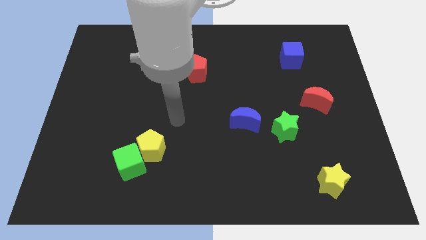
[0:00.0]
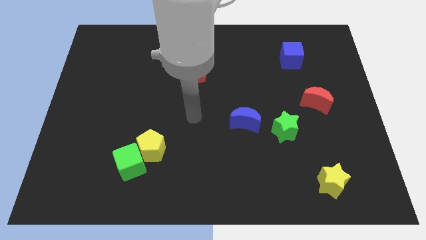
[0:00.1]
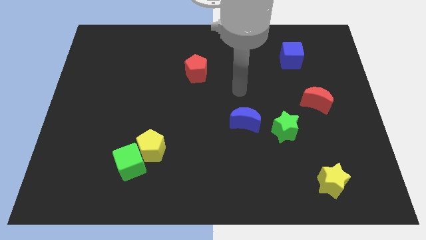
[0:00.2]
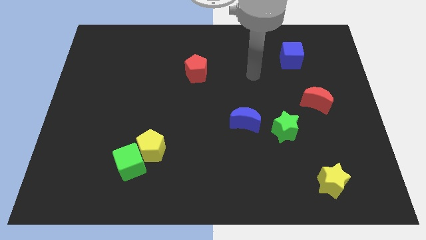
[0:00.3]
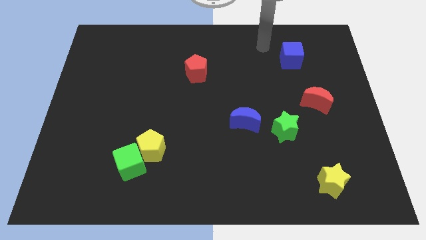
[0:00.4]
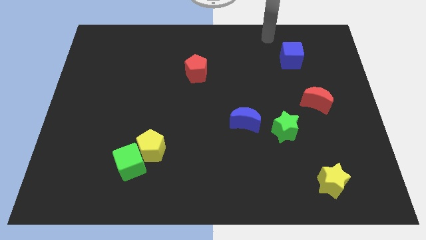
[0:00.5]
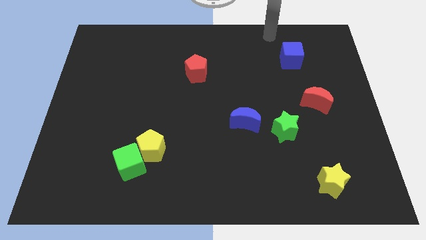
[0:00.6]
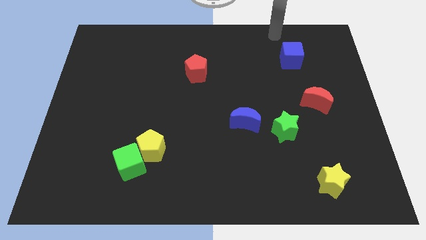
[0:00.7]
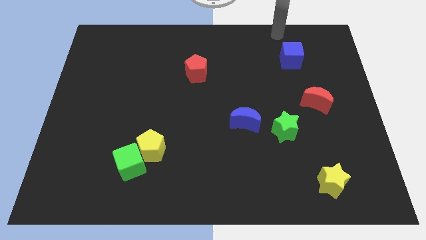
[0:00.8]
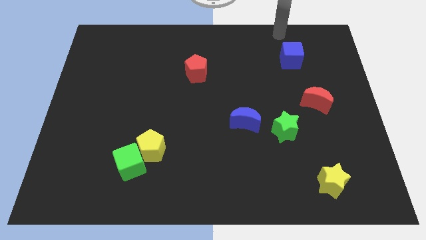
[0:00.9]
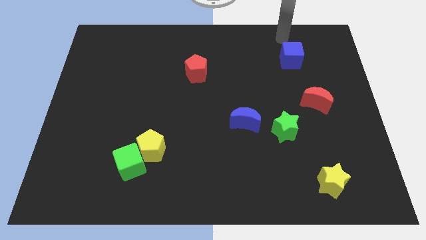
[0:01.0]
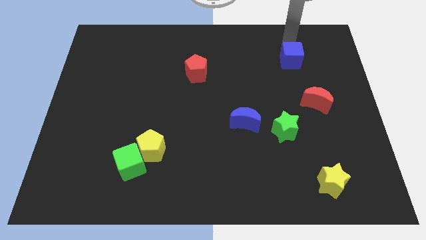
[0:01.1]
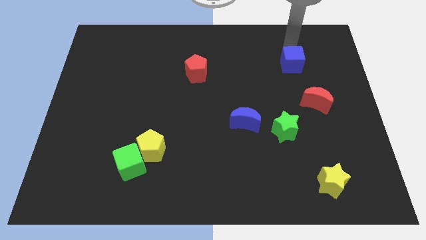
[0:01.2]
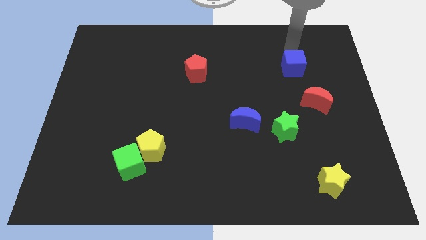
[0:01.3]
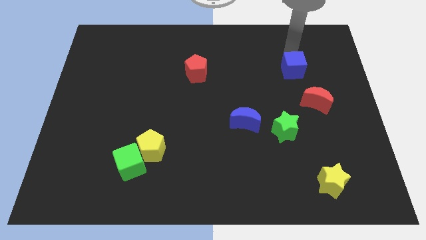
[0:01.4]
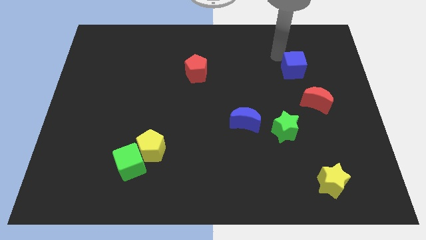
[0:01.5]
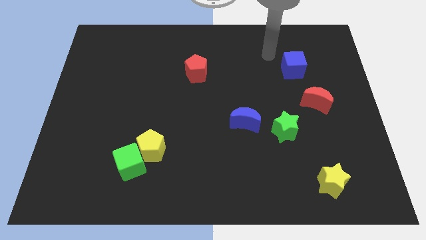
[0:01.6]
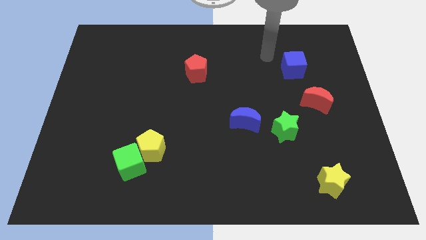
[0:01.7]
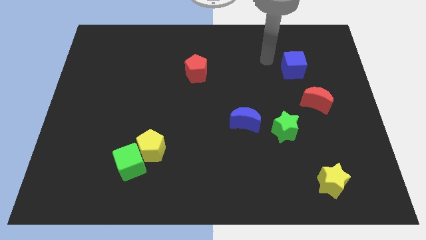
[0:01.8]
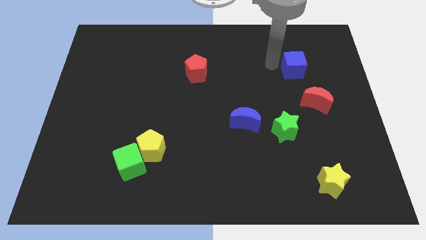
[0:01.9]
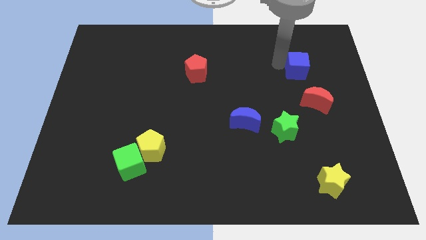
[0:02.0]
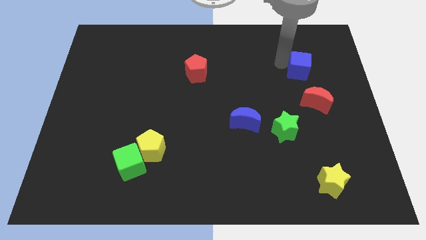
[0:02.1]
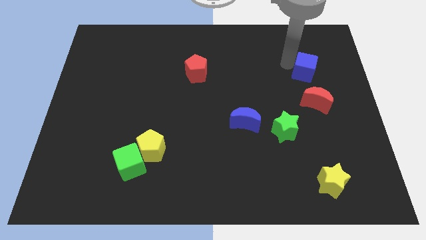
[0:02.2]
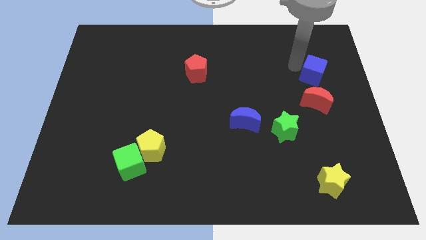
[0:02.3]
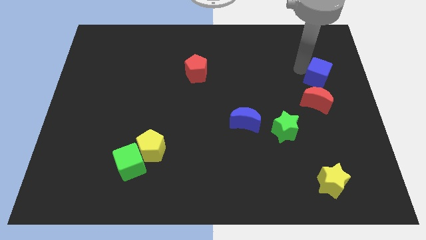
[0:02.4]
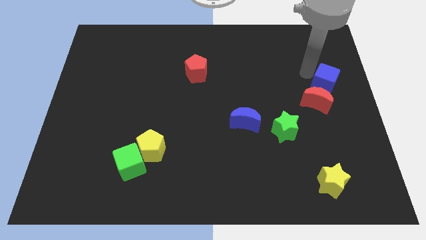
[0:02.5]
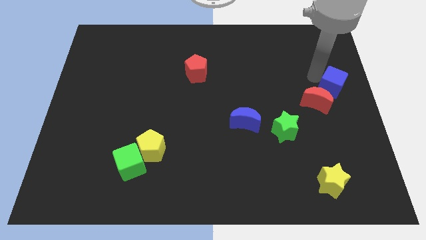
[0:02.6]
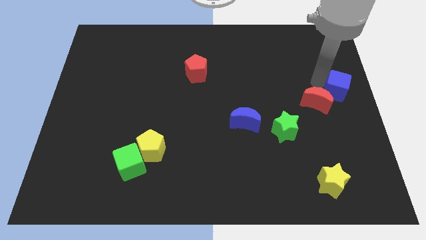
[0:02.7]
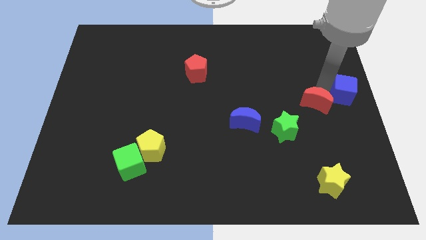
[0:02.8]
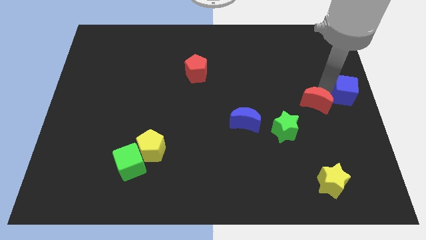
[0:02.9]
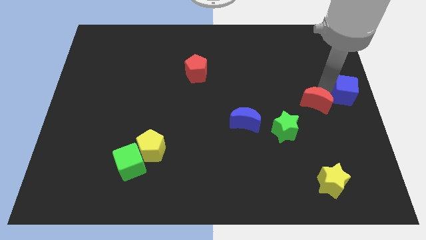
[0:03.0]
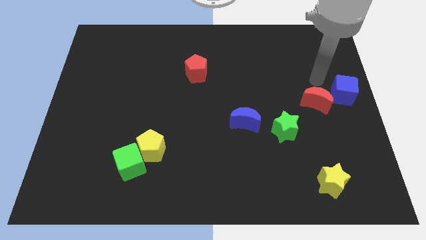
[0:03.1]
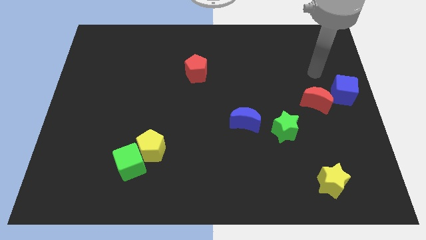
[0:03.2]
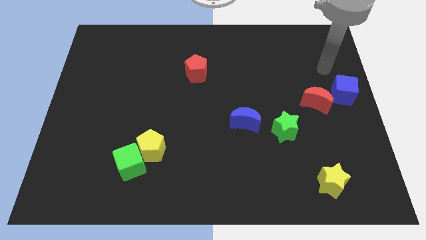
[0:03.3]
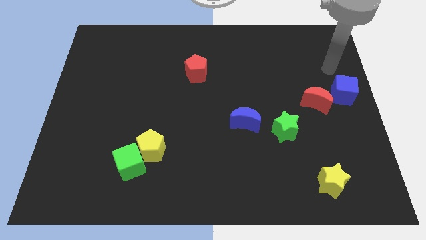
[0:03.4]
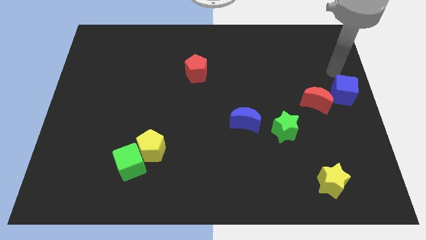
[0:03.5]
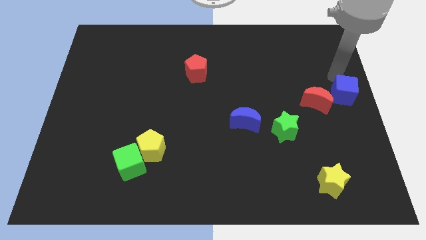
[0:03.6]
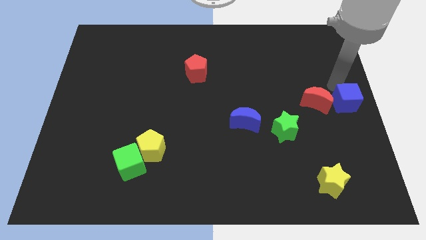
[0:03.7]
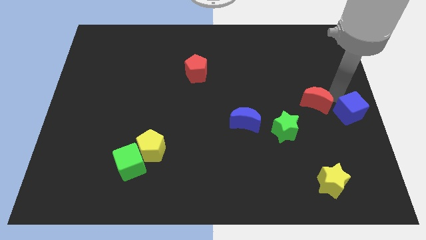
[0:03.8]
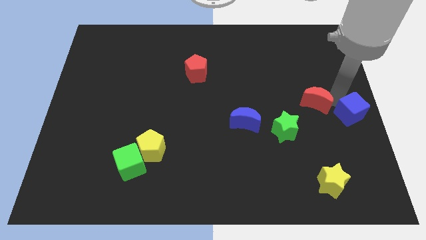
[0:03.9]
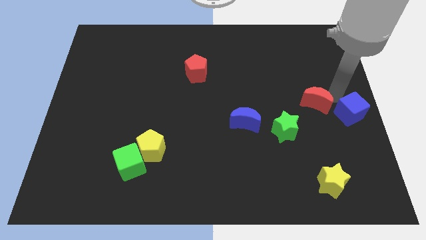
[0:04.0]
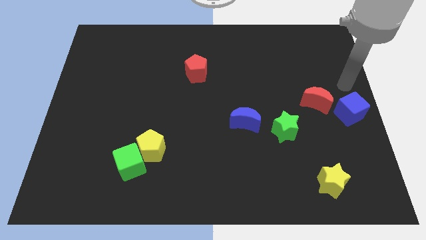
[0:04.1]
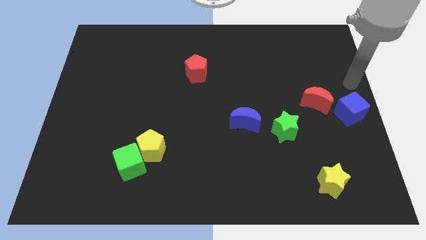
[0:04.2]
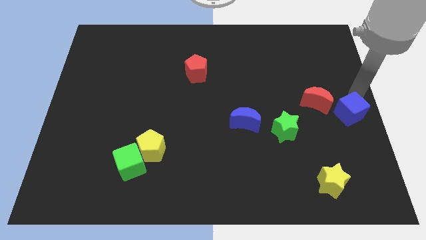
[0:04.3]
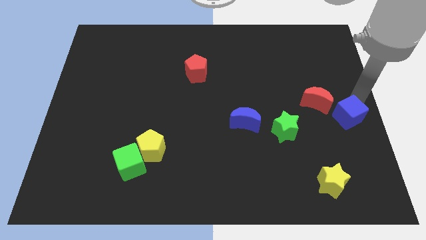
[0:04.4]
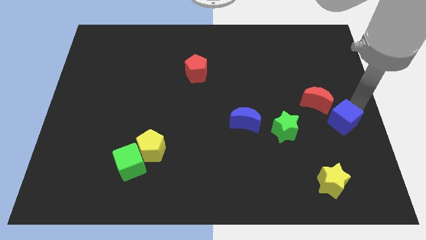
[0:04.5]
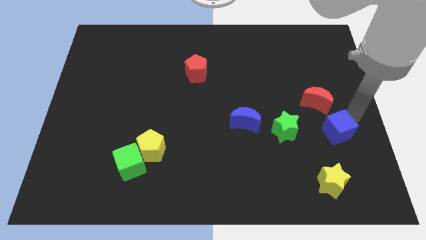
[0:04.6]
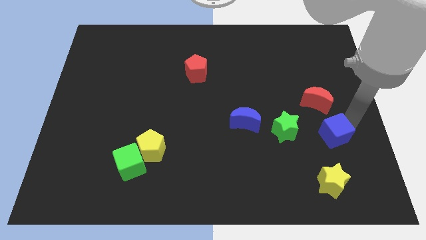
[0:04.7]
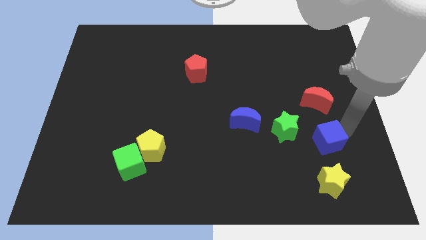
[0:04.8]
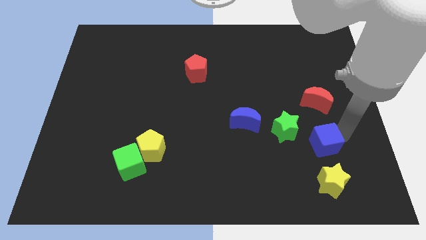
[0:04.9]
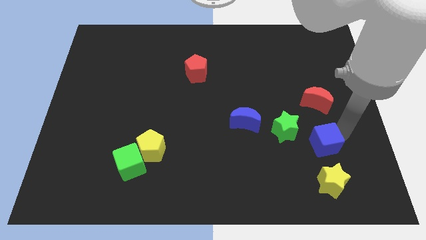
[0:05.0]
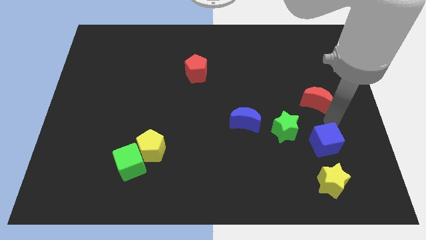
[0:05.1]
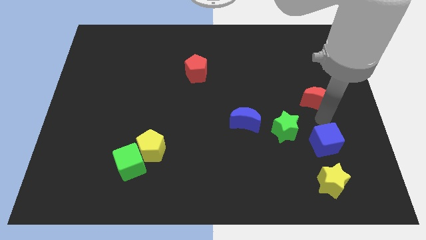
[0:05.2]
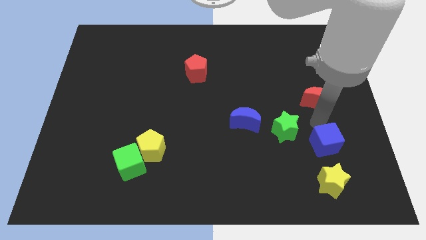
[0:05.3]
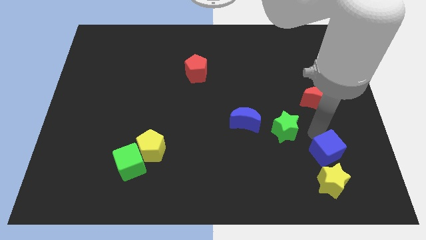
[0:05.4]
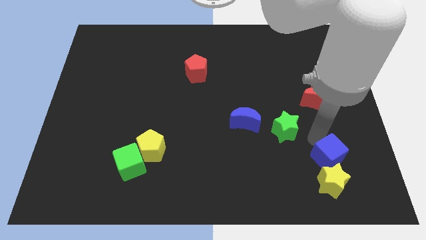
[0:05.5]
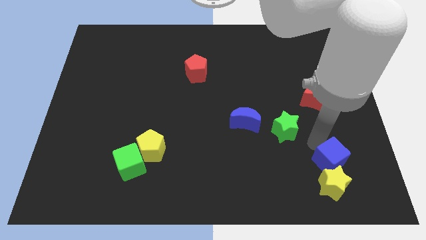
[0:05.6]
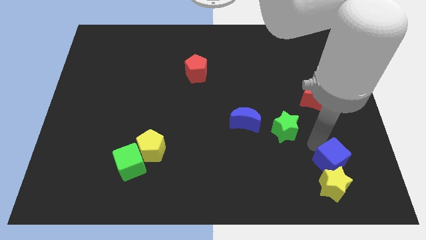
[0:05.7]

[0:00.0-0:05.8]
move the blue cube towards the yellow star

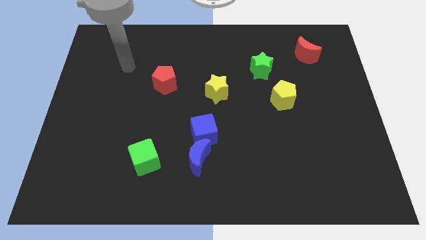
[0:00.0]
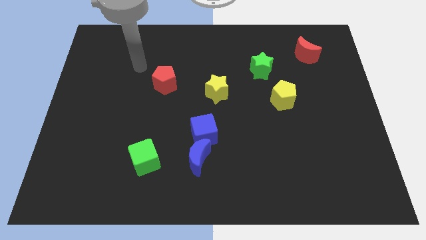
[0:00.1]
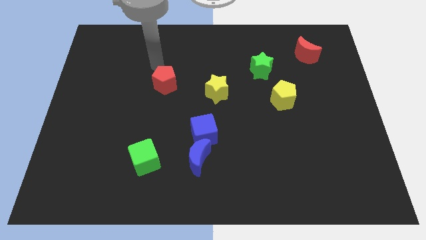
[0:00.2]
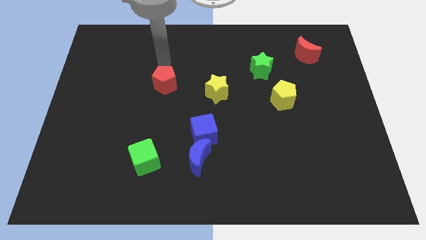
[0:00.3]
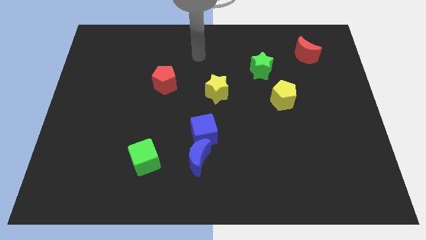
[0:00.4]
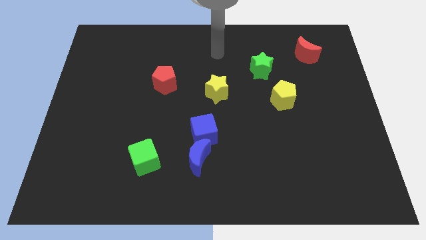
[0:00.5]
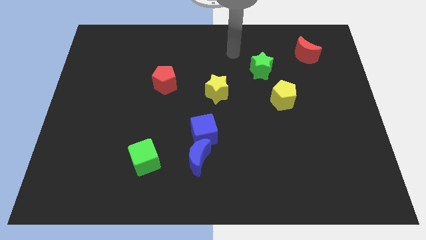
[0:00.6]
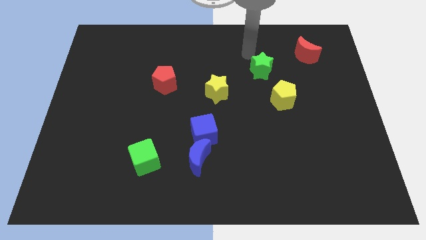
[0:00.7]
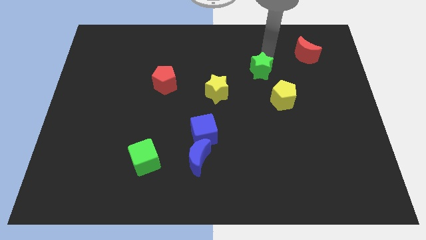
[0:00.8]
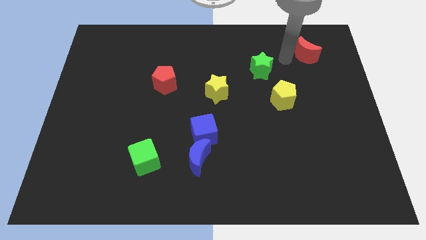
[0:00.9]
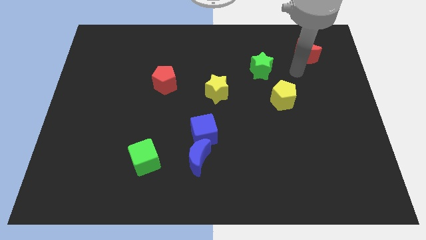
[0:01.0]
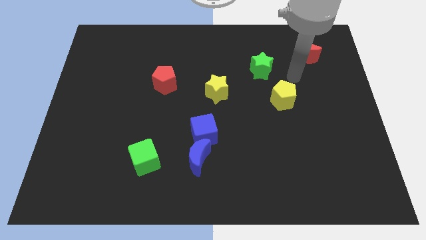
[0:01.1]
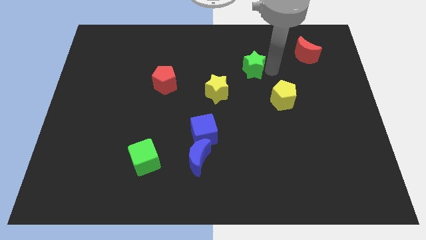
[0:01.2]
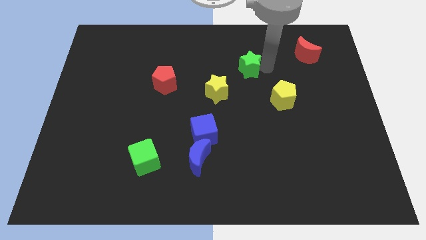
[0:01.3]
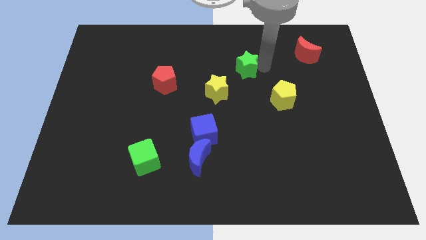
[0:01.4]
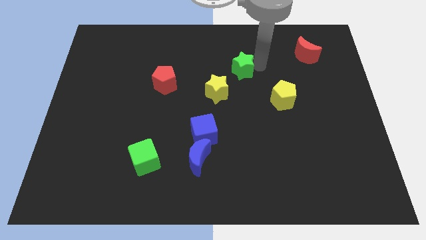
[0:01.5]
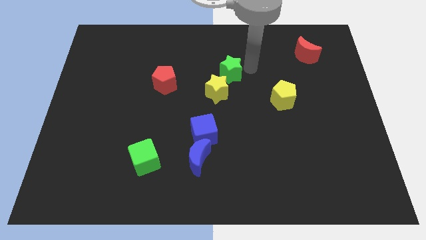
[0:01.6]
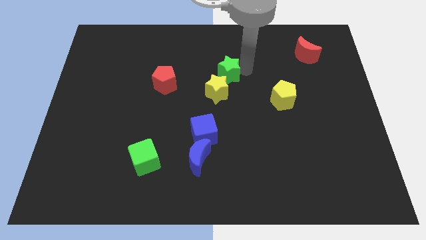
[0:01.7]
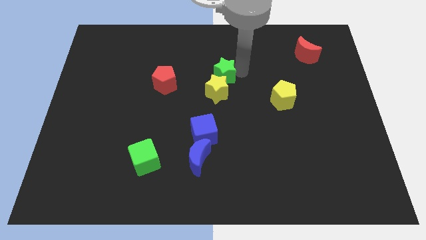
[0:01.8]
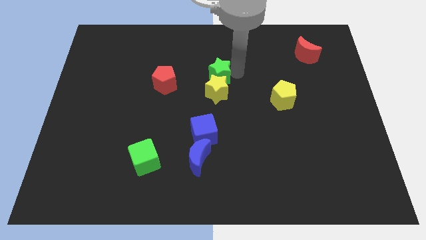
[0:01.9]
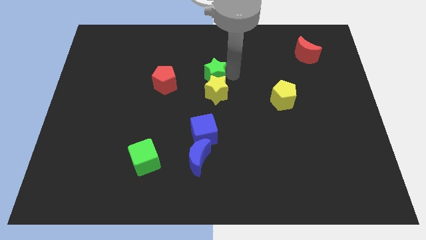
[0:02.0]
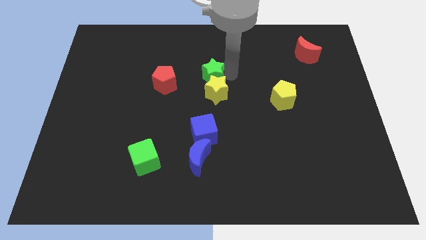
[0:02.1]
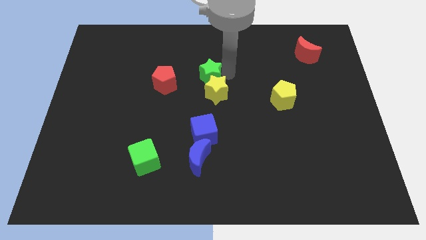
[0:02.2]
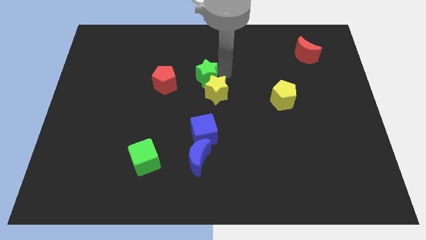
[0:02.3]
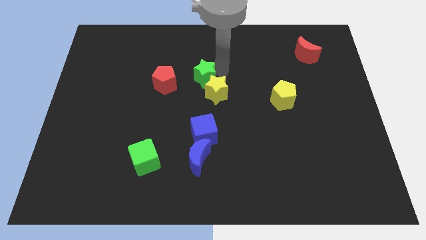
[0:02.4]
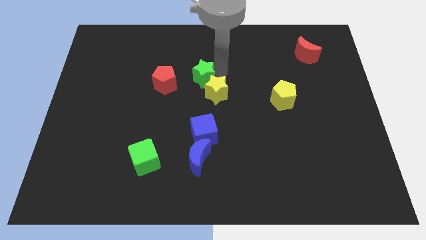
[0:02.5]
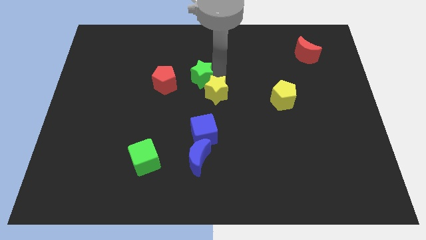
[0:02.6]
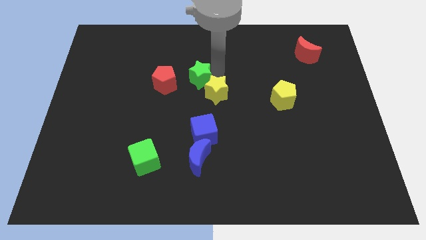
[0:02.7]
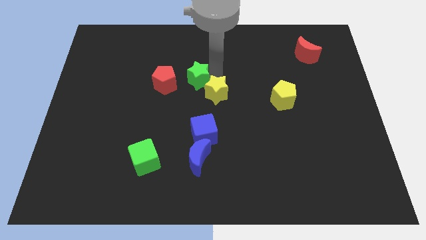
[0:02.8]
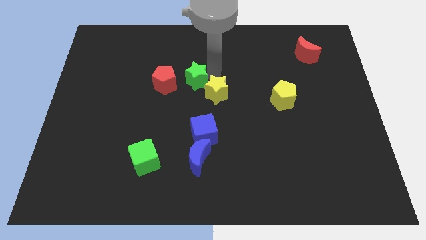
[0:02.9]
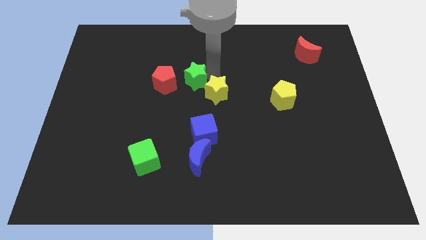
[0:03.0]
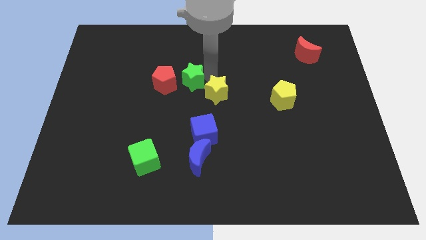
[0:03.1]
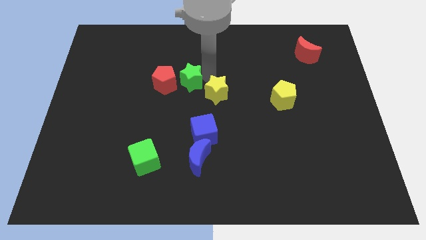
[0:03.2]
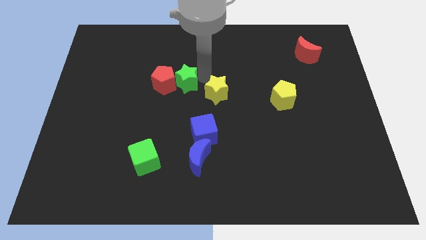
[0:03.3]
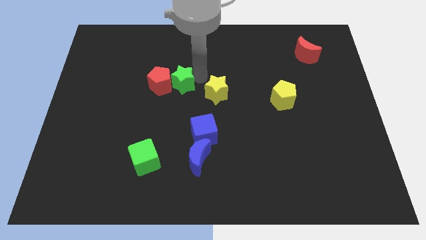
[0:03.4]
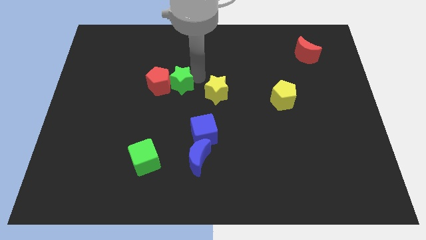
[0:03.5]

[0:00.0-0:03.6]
slide the green star close to the red pentagon
